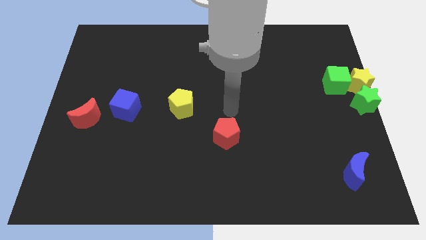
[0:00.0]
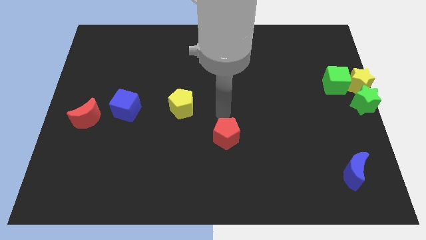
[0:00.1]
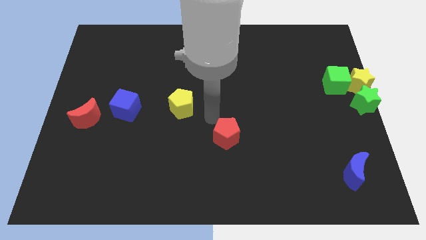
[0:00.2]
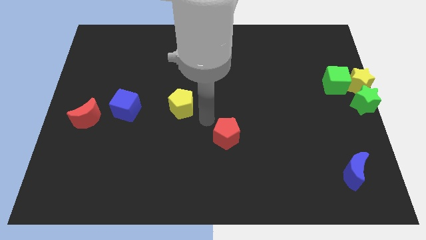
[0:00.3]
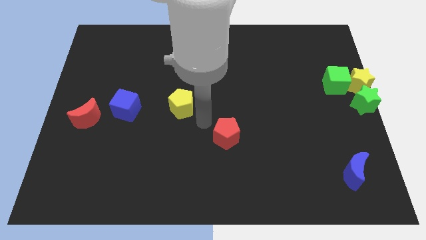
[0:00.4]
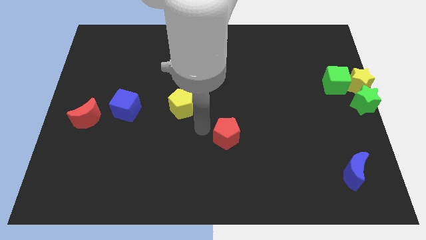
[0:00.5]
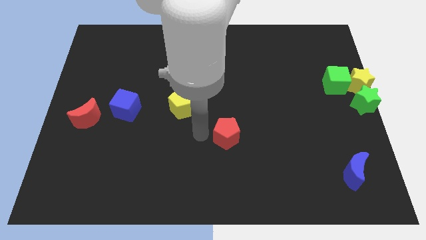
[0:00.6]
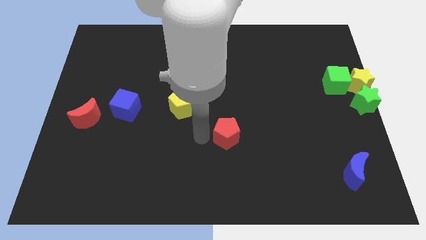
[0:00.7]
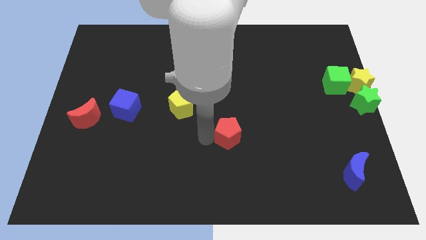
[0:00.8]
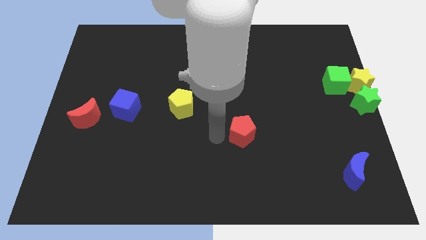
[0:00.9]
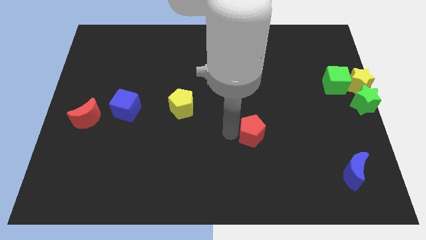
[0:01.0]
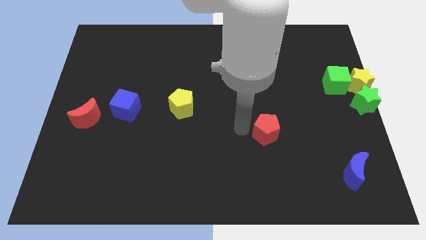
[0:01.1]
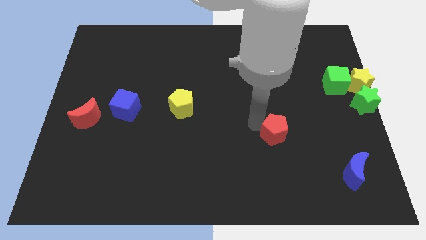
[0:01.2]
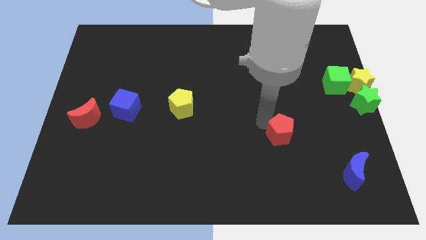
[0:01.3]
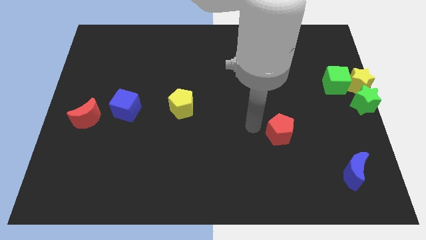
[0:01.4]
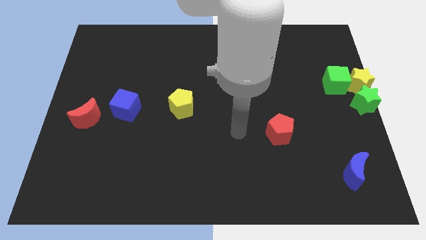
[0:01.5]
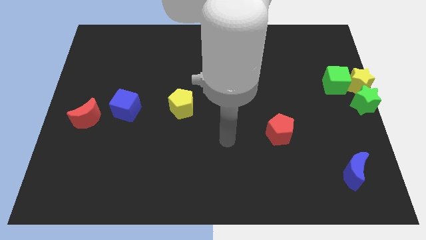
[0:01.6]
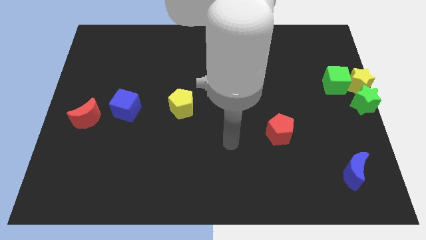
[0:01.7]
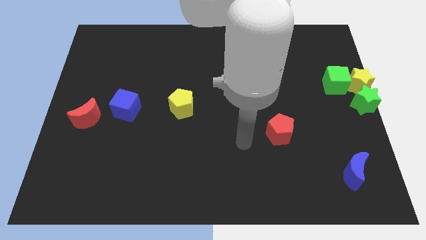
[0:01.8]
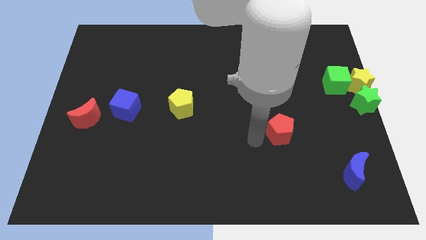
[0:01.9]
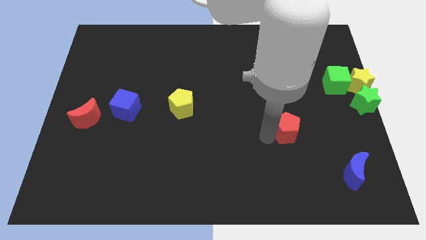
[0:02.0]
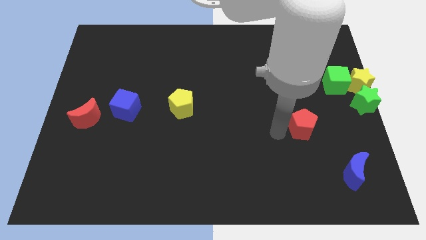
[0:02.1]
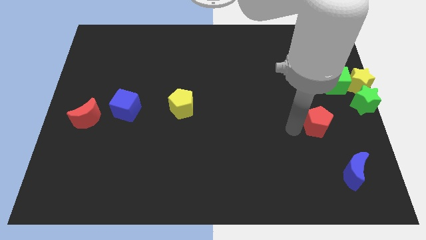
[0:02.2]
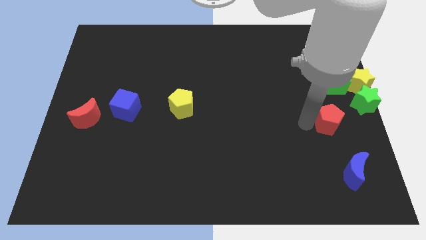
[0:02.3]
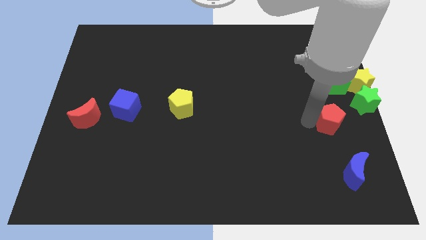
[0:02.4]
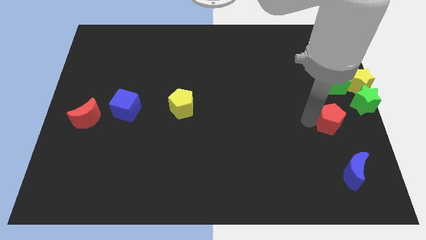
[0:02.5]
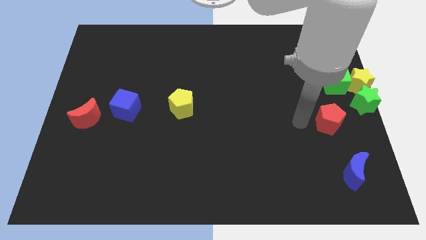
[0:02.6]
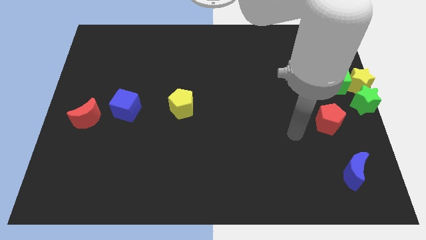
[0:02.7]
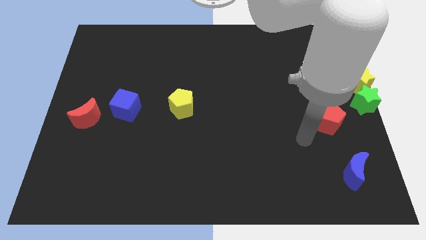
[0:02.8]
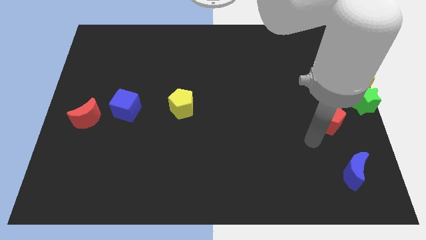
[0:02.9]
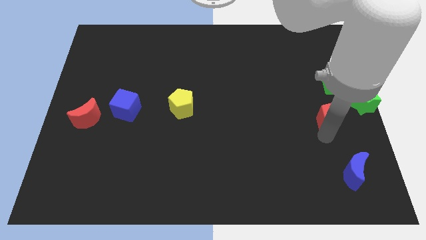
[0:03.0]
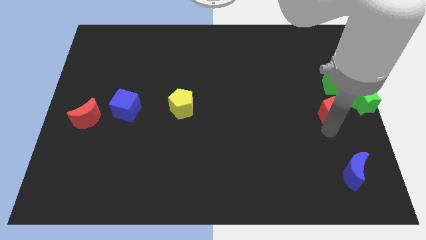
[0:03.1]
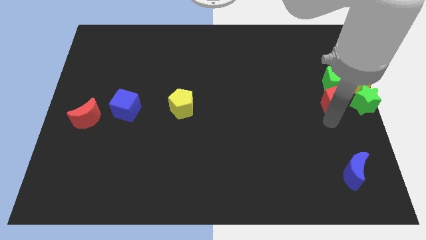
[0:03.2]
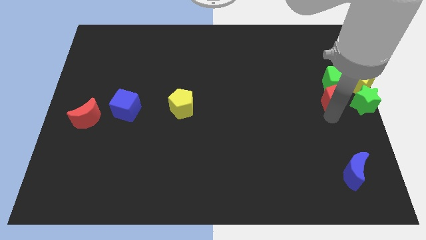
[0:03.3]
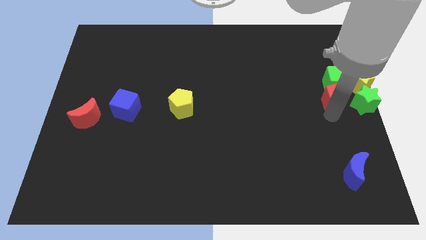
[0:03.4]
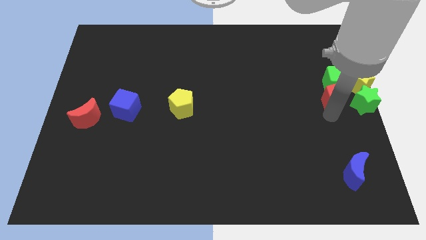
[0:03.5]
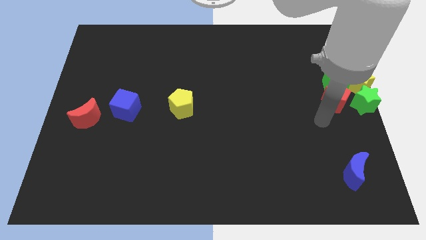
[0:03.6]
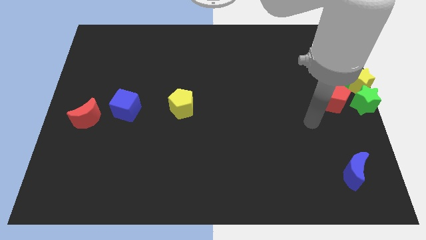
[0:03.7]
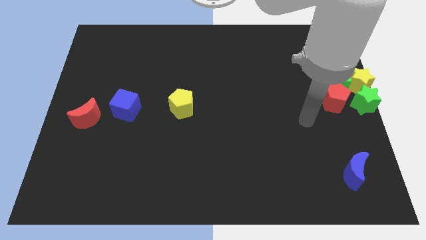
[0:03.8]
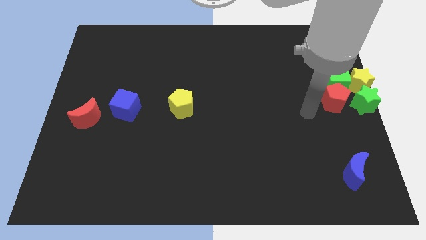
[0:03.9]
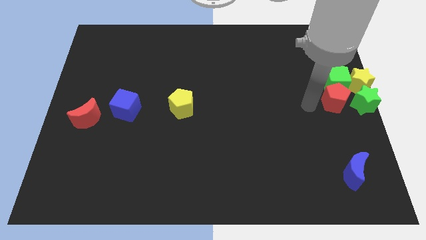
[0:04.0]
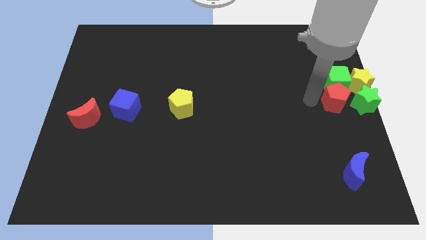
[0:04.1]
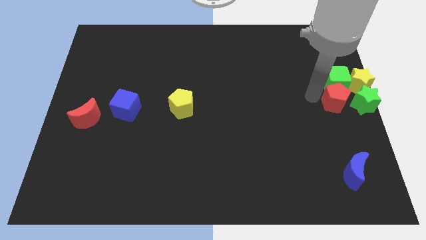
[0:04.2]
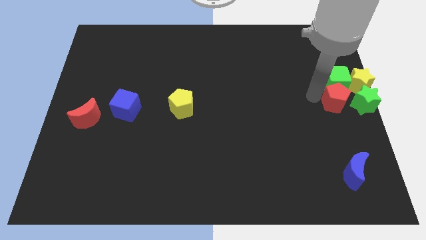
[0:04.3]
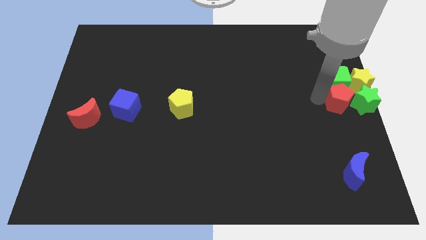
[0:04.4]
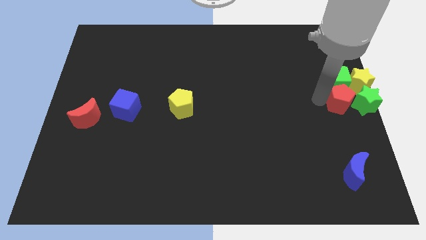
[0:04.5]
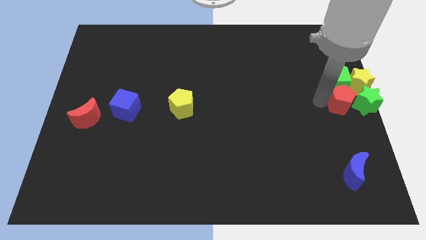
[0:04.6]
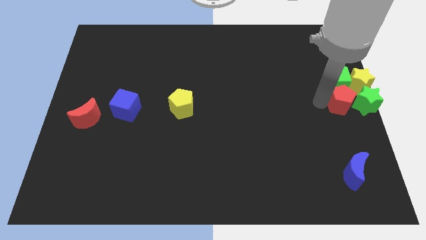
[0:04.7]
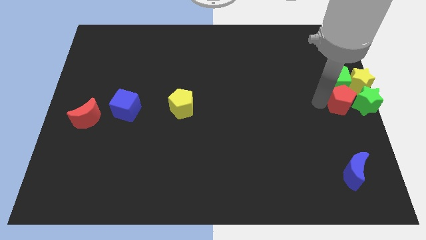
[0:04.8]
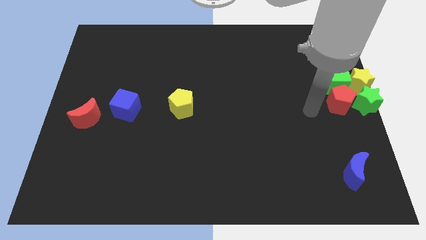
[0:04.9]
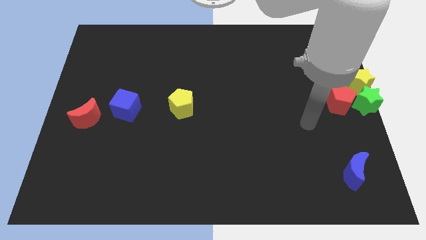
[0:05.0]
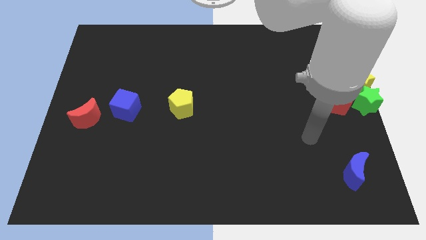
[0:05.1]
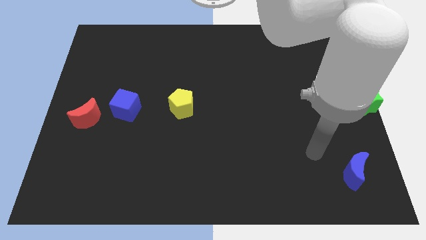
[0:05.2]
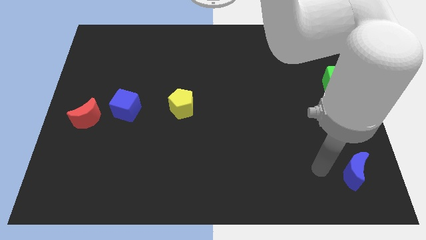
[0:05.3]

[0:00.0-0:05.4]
push the red pentagon into the green star

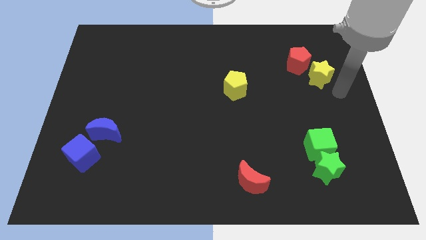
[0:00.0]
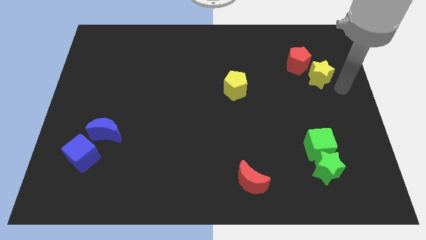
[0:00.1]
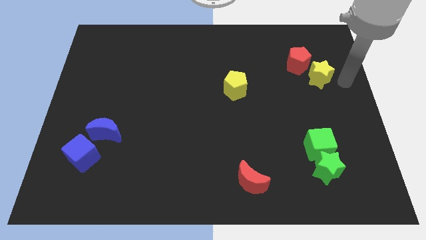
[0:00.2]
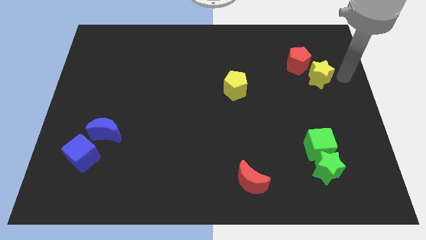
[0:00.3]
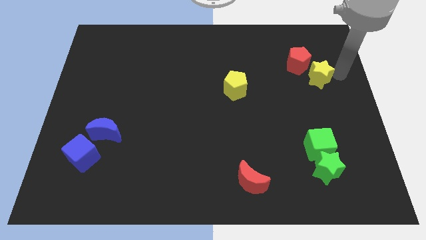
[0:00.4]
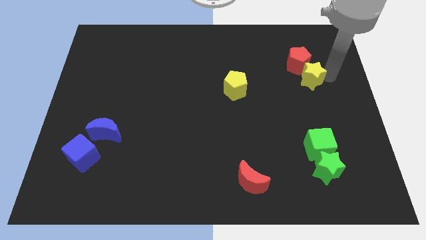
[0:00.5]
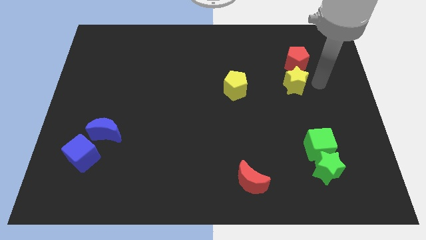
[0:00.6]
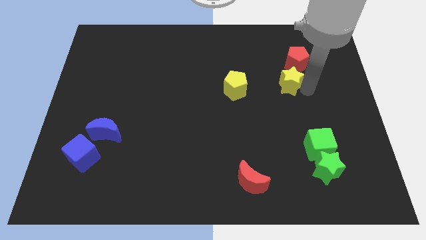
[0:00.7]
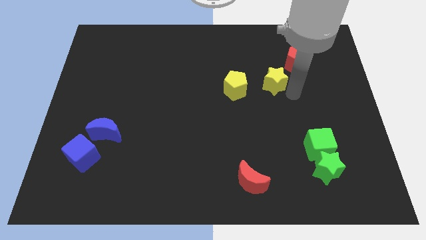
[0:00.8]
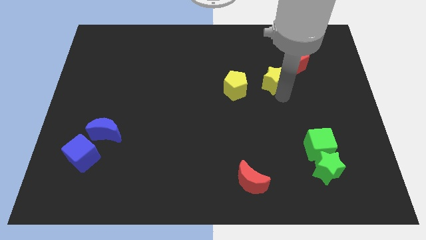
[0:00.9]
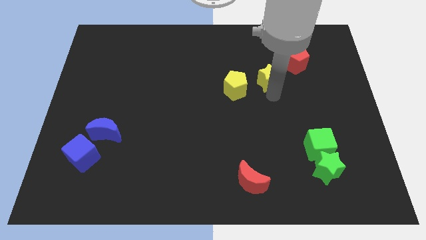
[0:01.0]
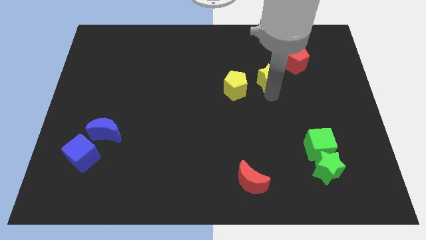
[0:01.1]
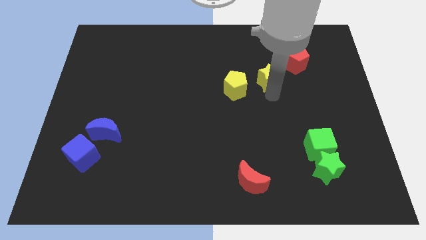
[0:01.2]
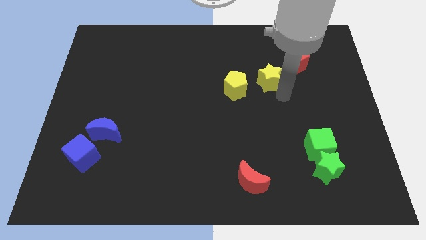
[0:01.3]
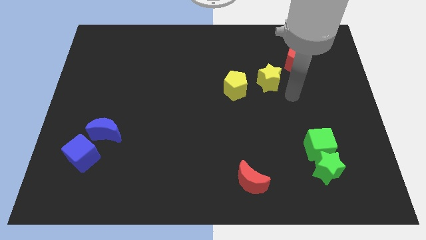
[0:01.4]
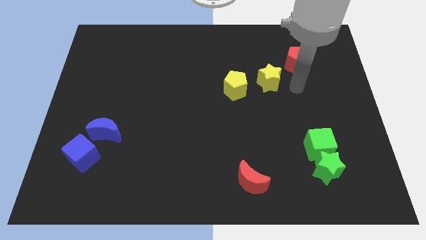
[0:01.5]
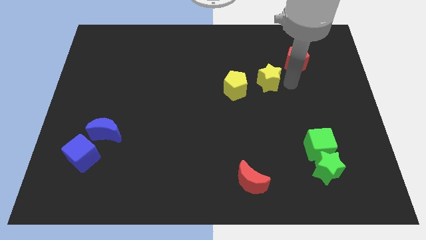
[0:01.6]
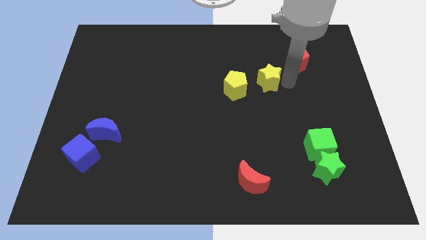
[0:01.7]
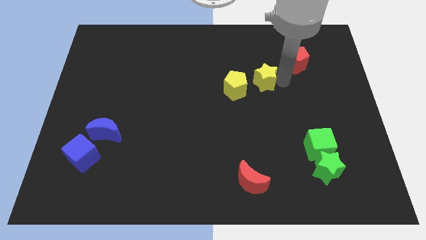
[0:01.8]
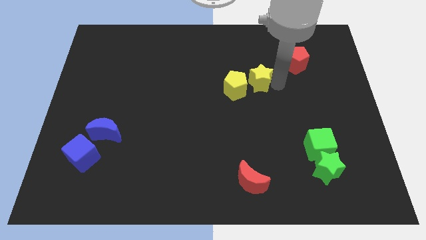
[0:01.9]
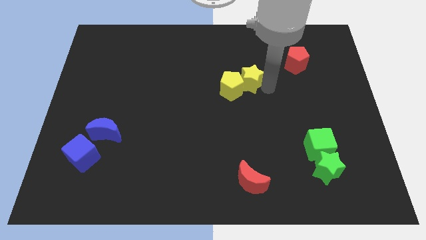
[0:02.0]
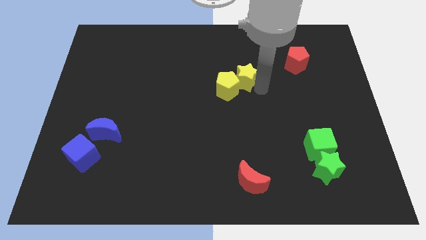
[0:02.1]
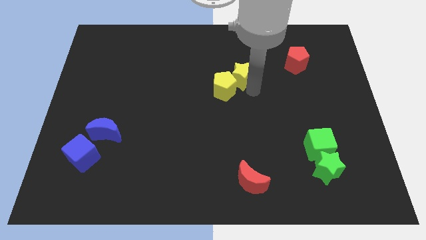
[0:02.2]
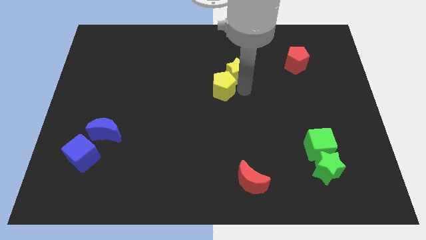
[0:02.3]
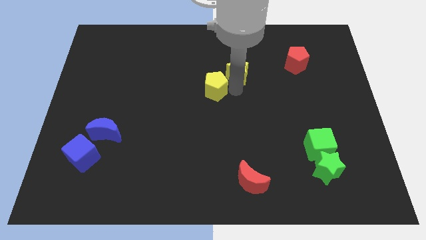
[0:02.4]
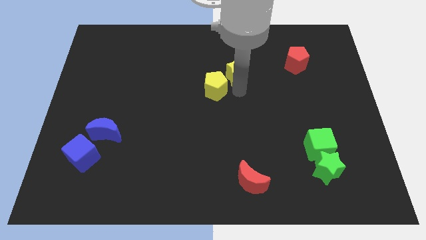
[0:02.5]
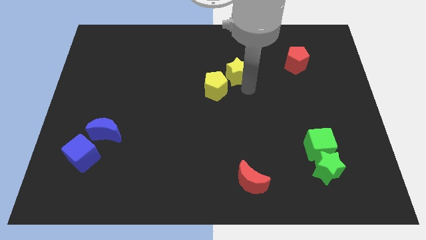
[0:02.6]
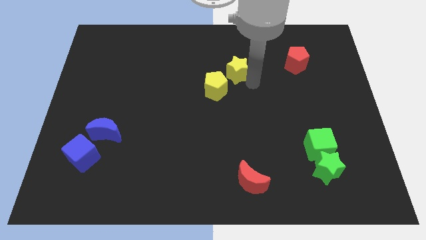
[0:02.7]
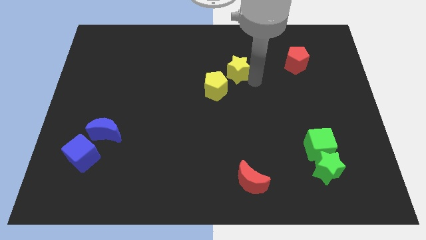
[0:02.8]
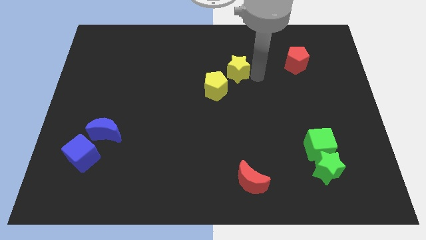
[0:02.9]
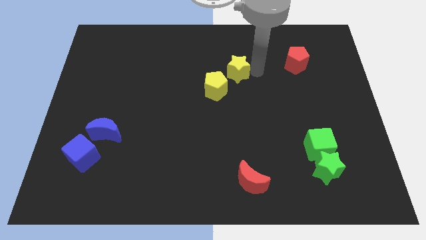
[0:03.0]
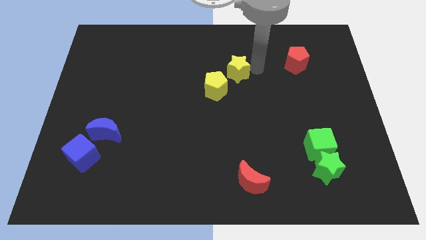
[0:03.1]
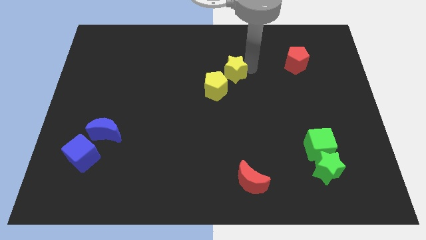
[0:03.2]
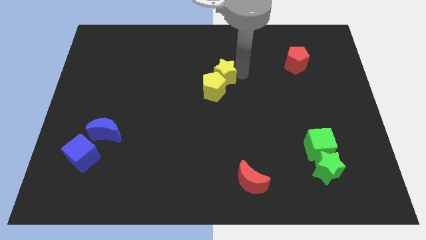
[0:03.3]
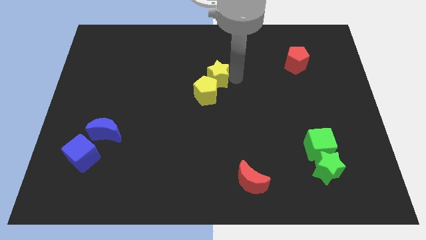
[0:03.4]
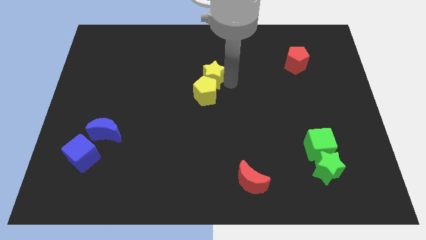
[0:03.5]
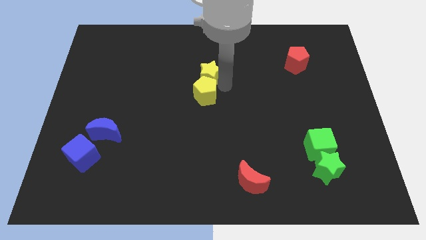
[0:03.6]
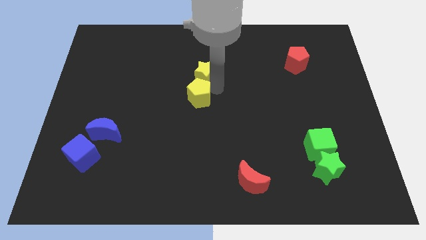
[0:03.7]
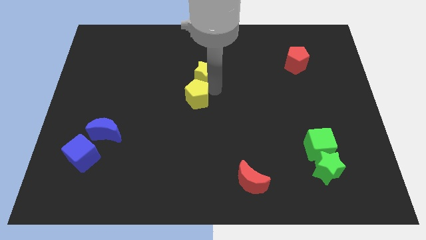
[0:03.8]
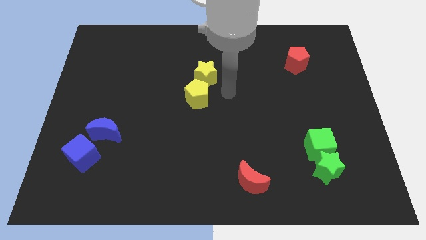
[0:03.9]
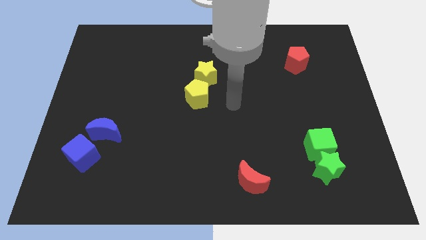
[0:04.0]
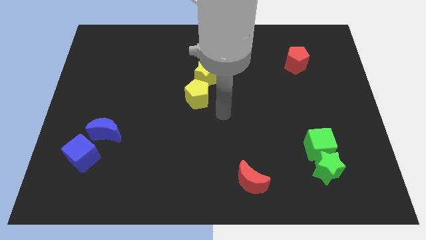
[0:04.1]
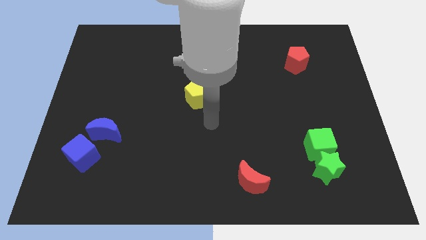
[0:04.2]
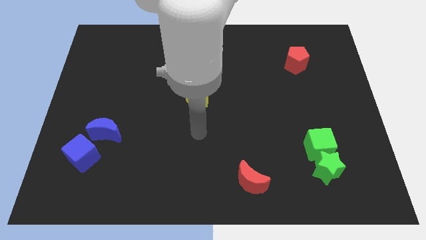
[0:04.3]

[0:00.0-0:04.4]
move the yellow star with the yellow pentagon
